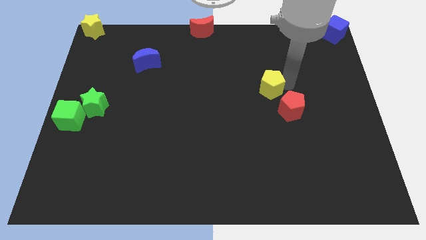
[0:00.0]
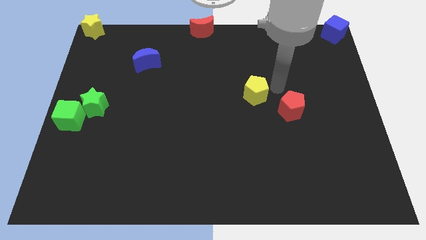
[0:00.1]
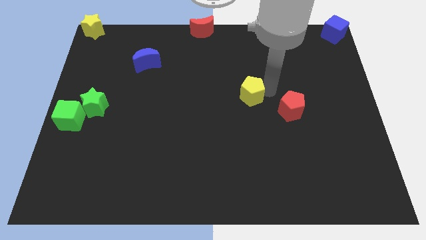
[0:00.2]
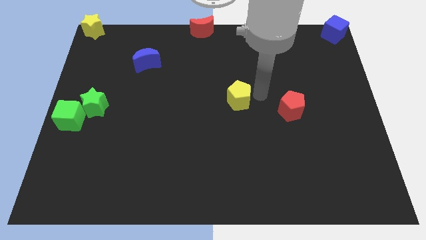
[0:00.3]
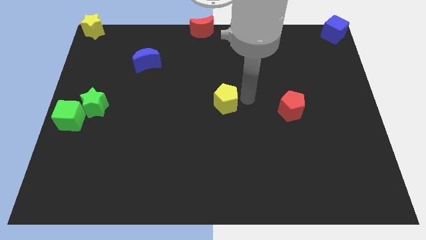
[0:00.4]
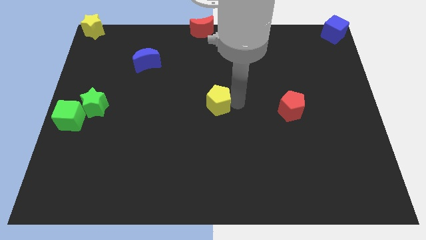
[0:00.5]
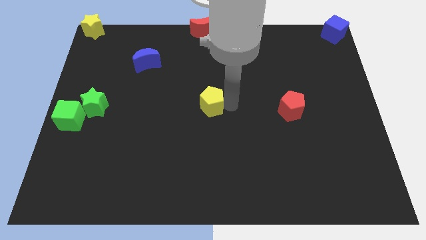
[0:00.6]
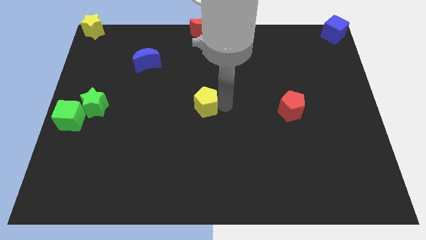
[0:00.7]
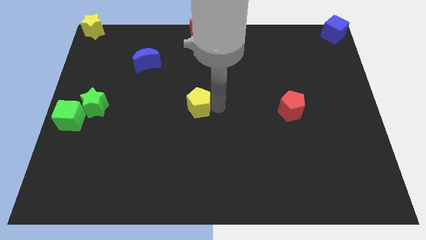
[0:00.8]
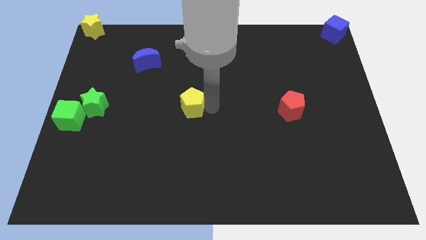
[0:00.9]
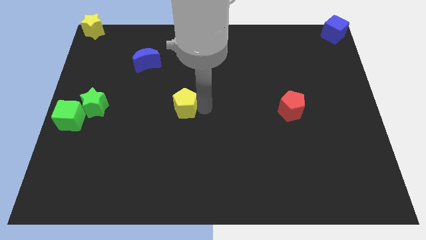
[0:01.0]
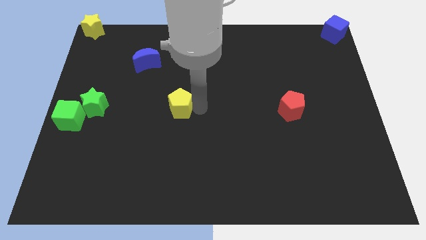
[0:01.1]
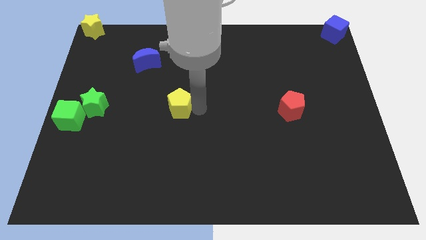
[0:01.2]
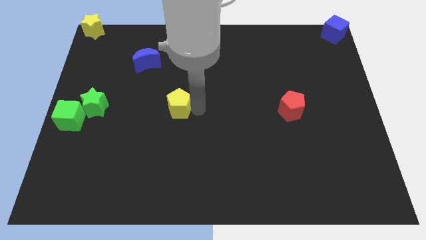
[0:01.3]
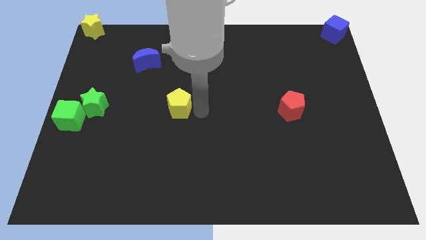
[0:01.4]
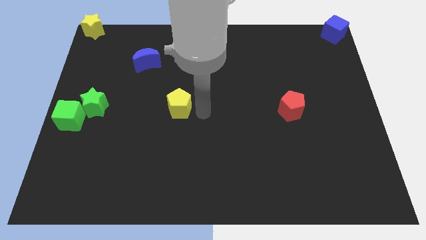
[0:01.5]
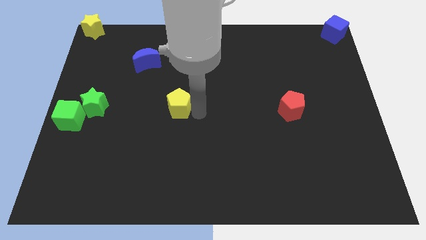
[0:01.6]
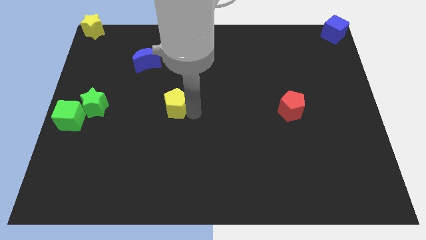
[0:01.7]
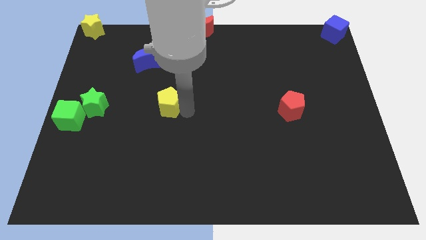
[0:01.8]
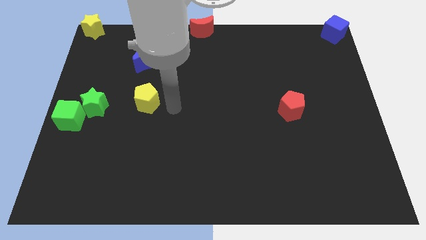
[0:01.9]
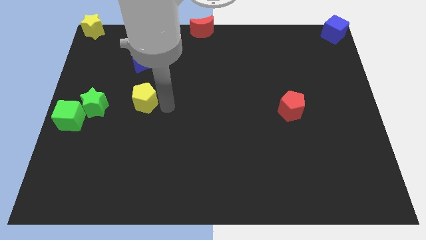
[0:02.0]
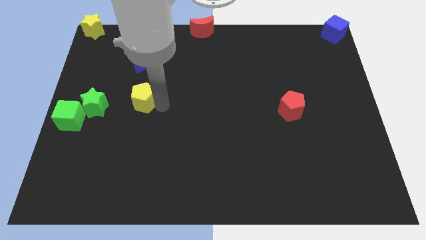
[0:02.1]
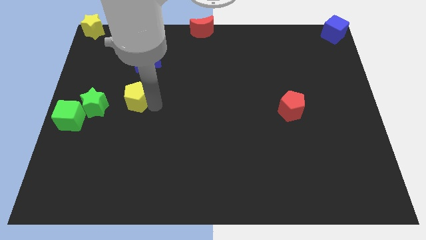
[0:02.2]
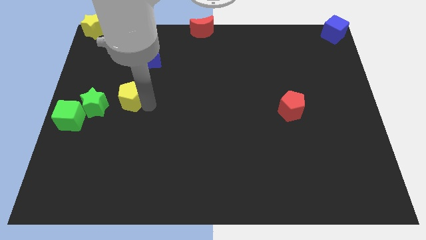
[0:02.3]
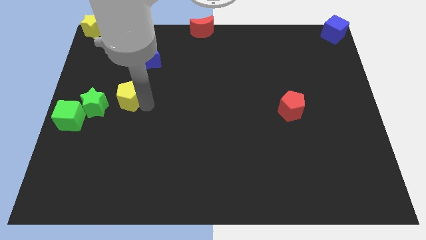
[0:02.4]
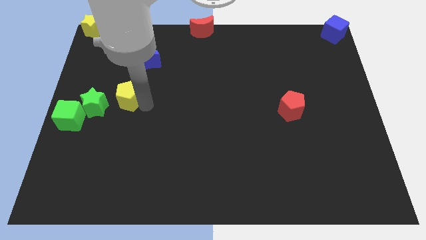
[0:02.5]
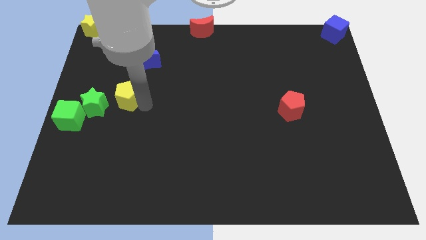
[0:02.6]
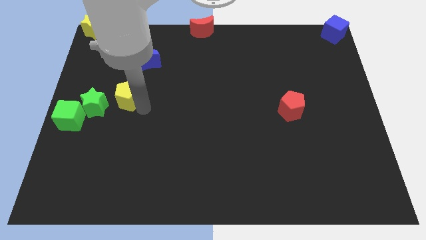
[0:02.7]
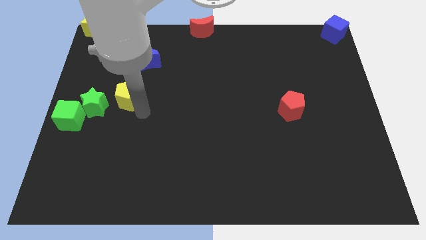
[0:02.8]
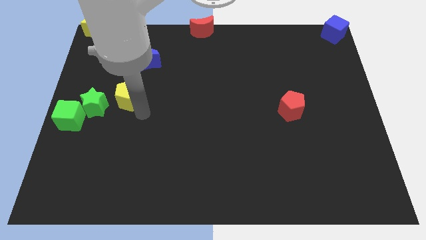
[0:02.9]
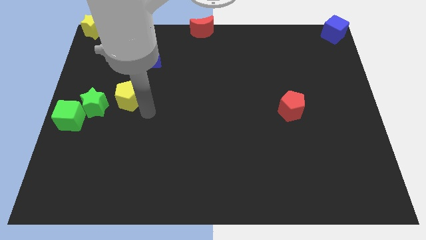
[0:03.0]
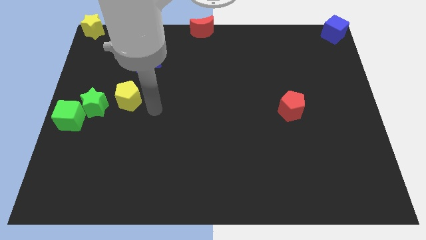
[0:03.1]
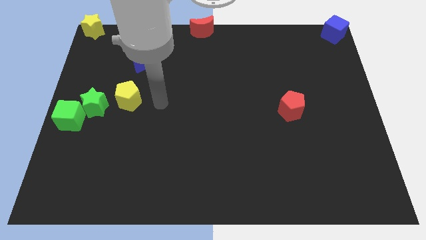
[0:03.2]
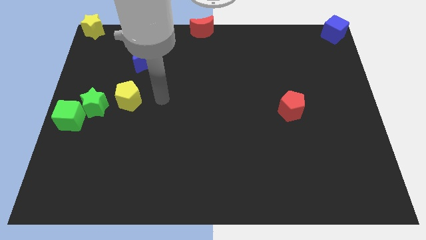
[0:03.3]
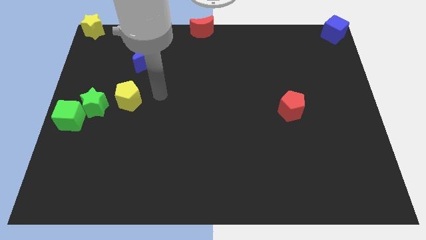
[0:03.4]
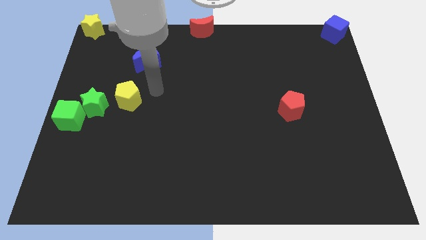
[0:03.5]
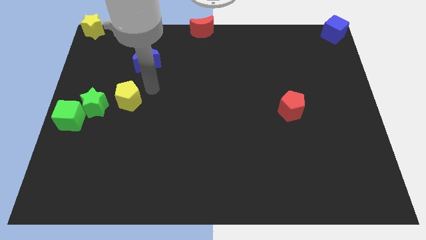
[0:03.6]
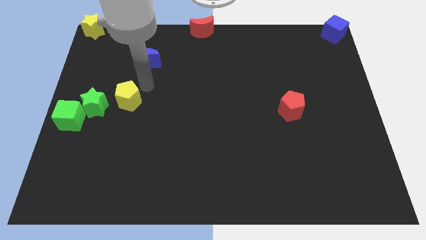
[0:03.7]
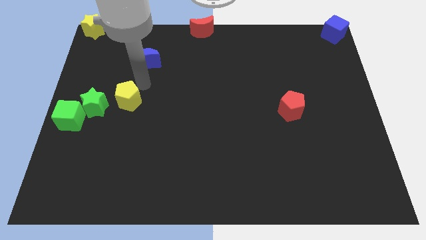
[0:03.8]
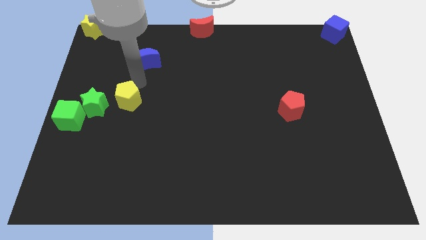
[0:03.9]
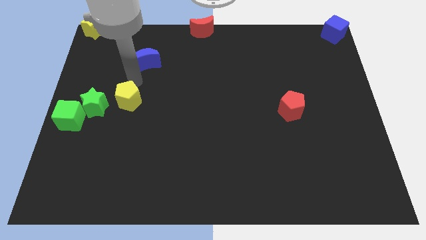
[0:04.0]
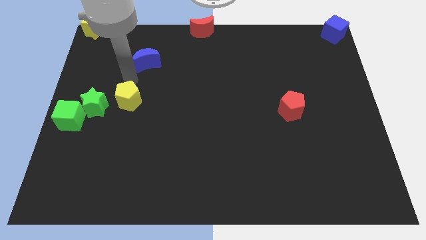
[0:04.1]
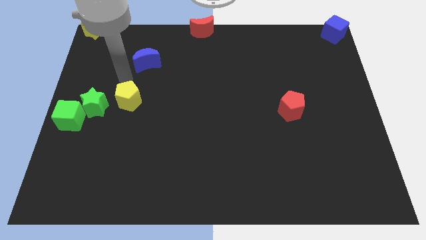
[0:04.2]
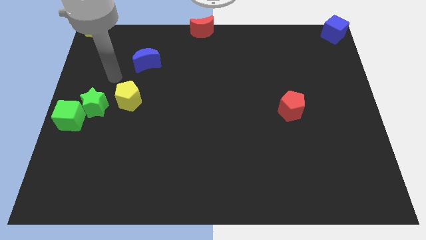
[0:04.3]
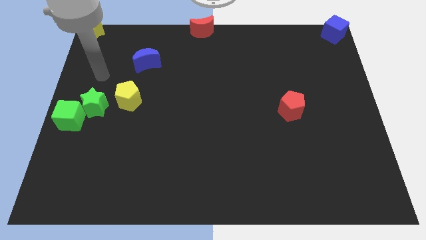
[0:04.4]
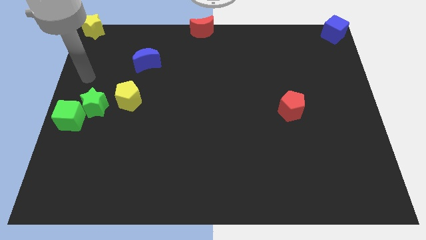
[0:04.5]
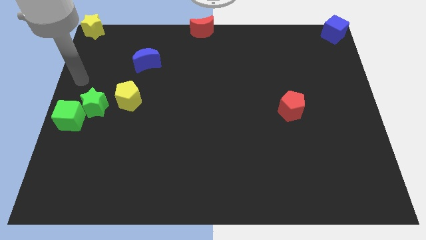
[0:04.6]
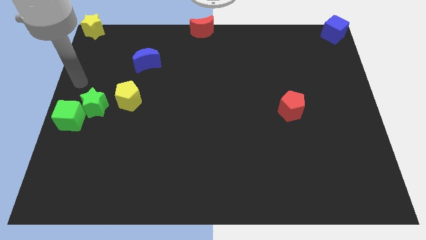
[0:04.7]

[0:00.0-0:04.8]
move the yellow pentagon to the right of the green star

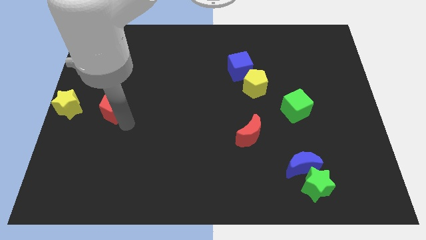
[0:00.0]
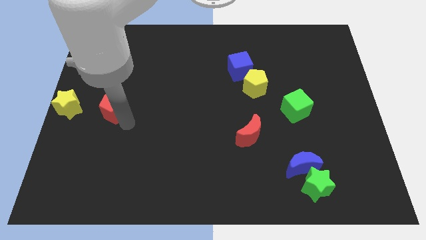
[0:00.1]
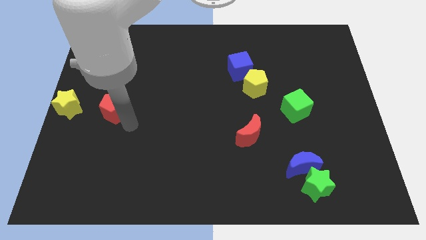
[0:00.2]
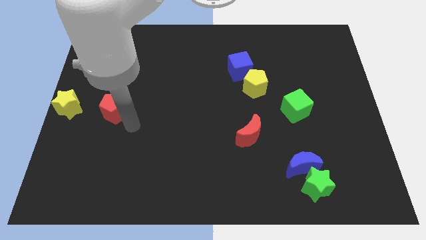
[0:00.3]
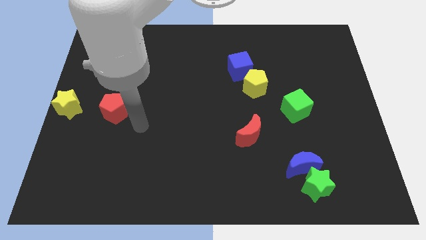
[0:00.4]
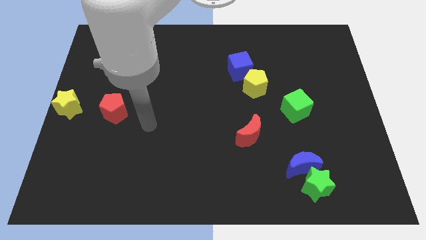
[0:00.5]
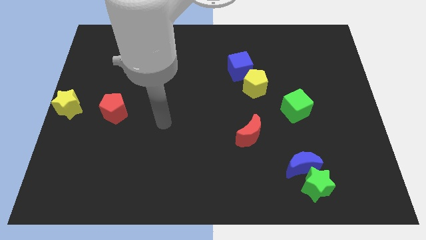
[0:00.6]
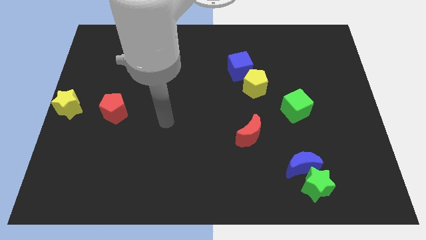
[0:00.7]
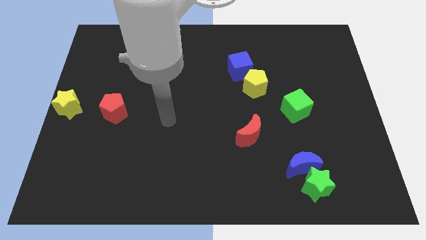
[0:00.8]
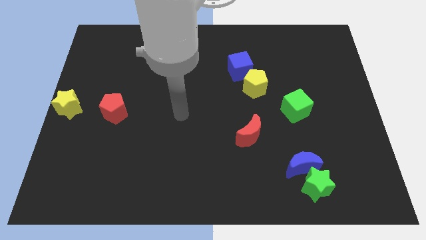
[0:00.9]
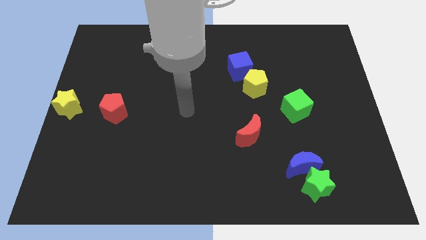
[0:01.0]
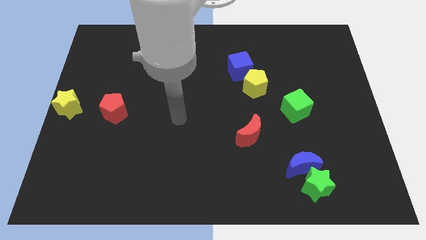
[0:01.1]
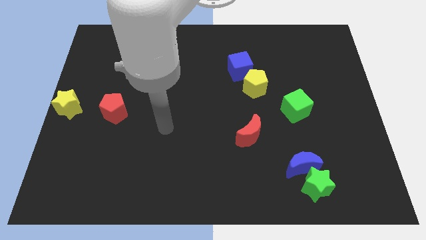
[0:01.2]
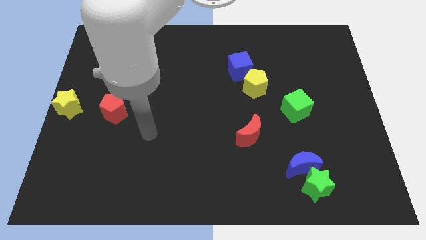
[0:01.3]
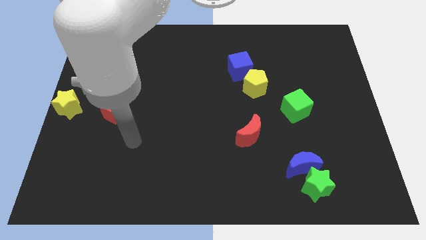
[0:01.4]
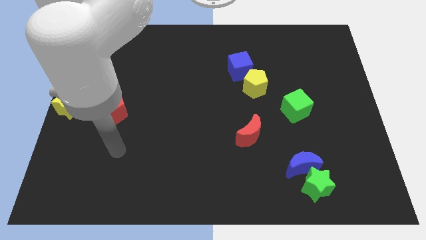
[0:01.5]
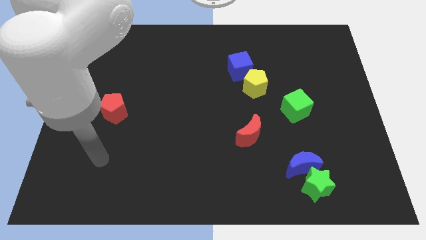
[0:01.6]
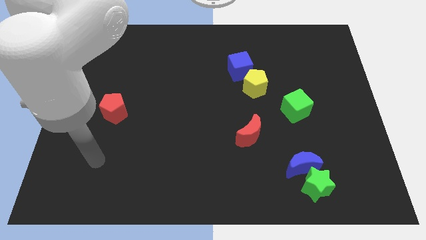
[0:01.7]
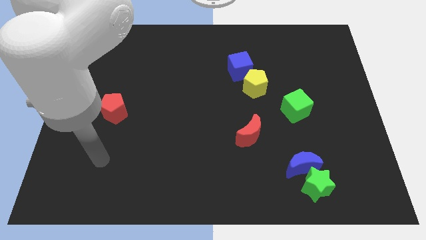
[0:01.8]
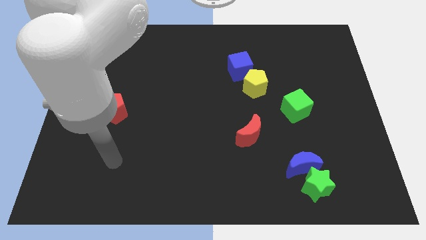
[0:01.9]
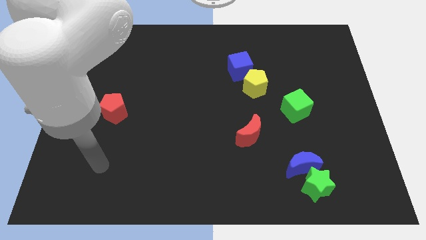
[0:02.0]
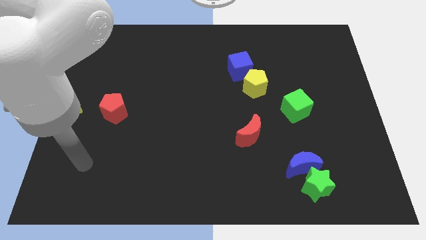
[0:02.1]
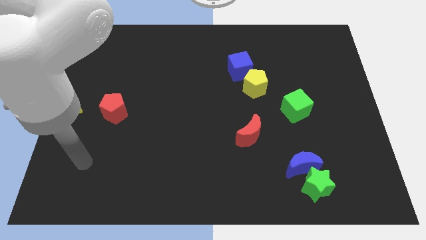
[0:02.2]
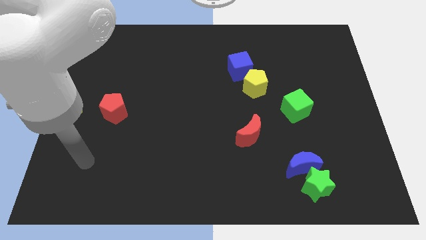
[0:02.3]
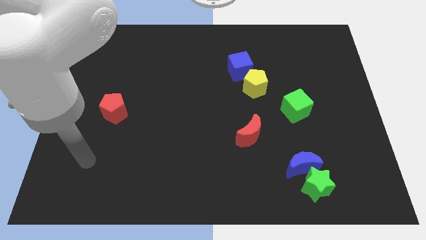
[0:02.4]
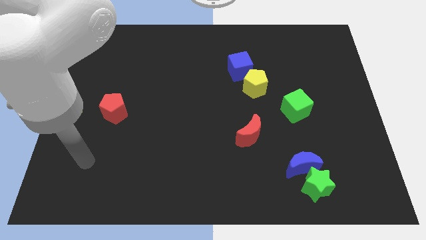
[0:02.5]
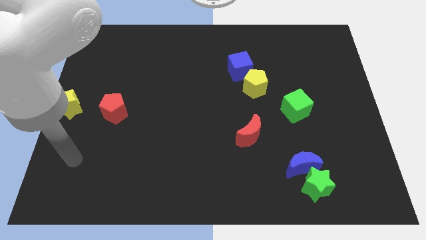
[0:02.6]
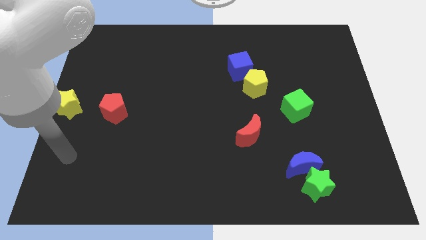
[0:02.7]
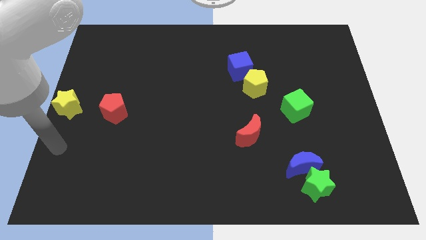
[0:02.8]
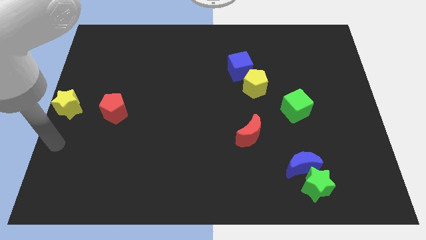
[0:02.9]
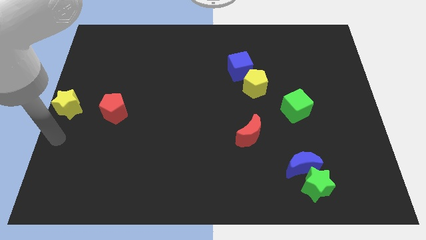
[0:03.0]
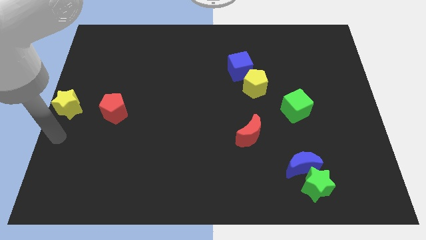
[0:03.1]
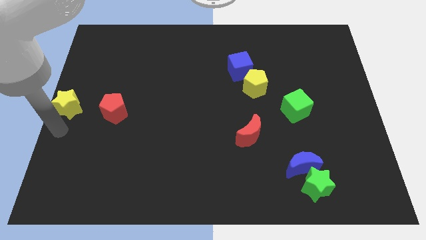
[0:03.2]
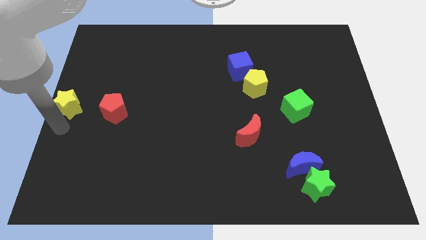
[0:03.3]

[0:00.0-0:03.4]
move your arm to the bottom of the yellow star

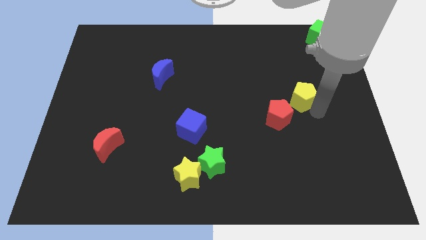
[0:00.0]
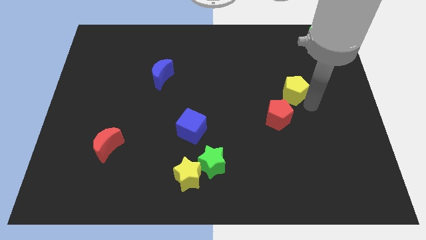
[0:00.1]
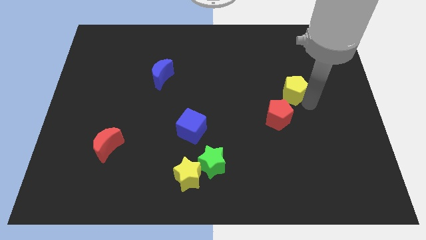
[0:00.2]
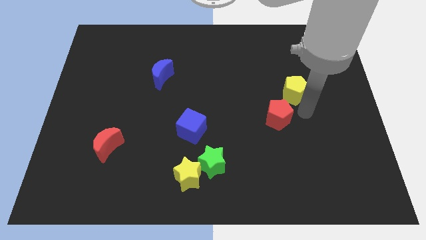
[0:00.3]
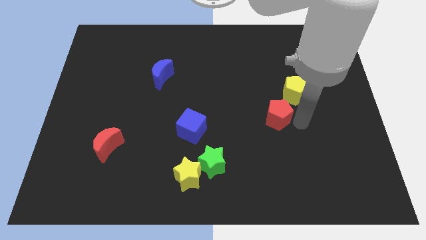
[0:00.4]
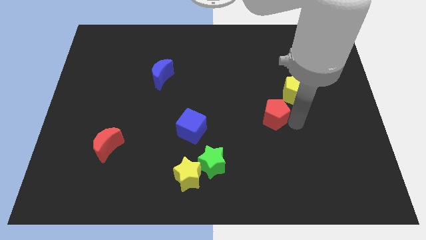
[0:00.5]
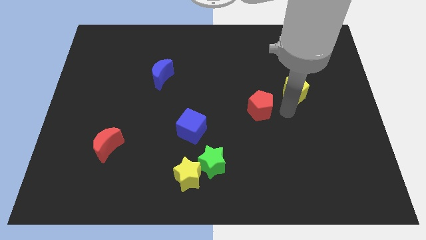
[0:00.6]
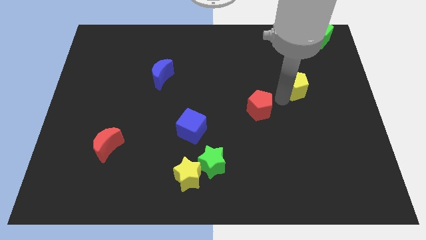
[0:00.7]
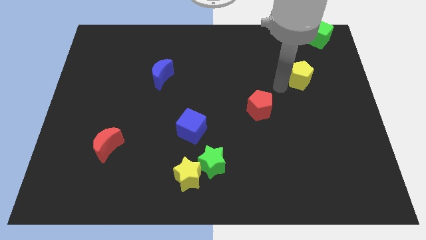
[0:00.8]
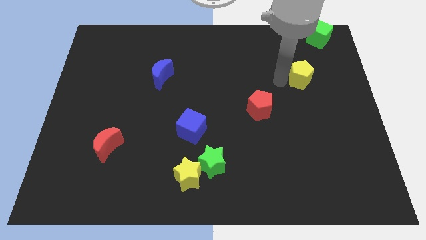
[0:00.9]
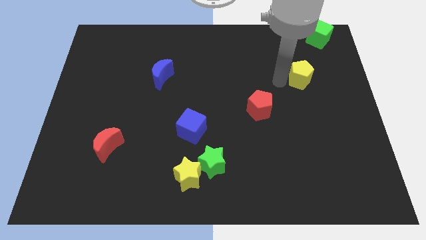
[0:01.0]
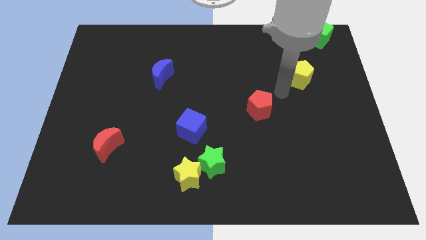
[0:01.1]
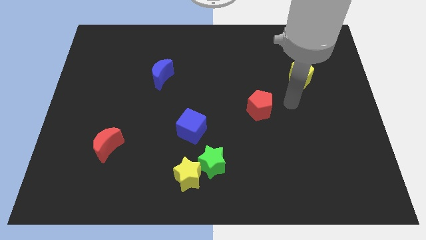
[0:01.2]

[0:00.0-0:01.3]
separate yellow and red pentagons
